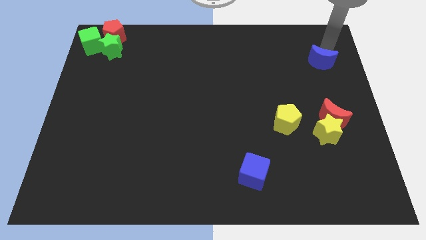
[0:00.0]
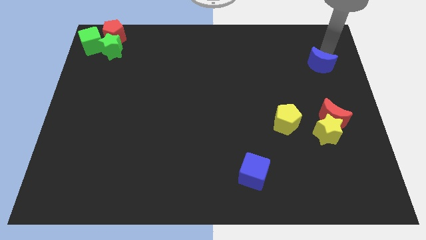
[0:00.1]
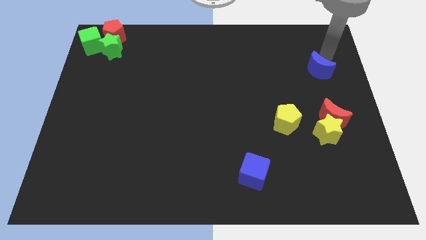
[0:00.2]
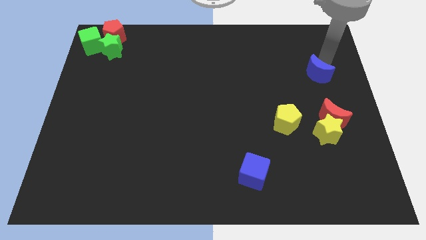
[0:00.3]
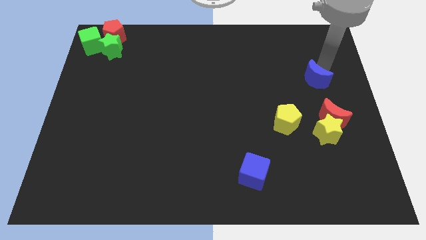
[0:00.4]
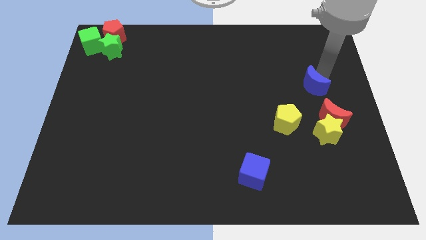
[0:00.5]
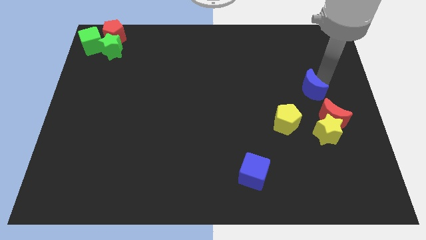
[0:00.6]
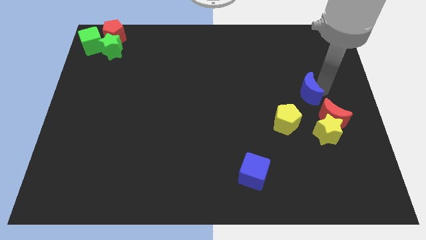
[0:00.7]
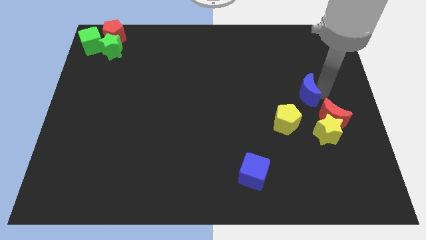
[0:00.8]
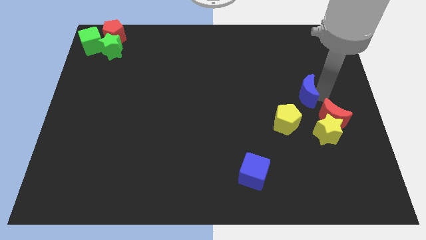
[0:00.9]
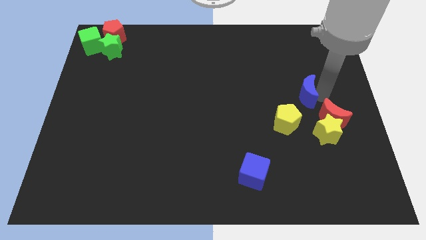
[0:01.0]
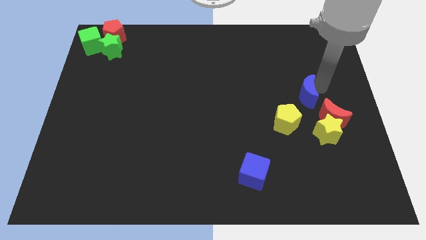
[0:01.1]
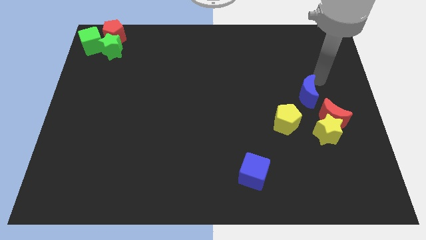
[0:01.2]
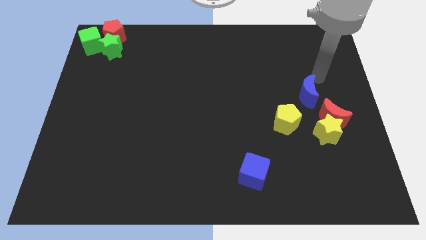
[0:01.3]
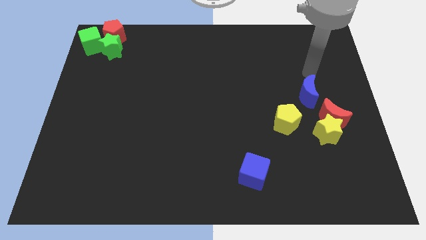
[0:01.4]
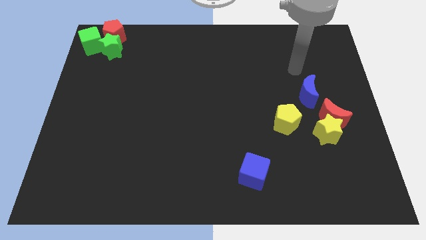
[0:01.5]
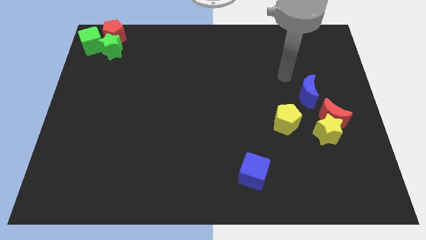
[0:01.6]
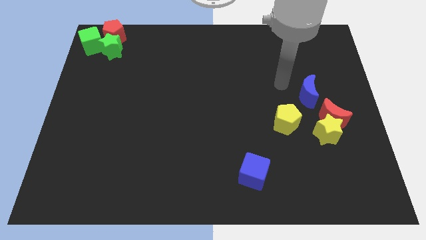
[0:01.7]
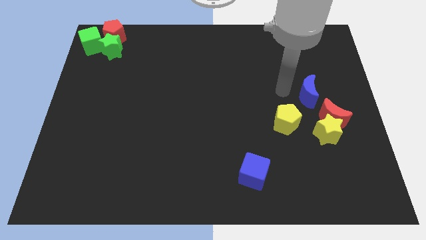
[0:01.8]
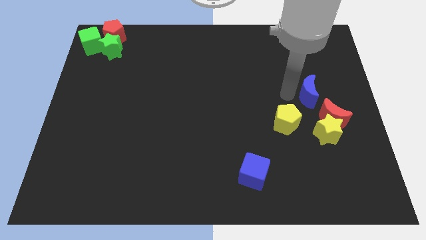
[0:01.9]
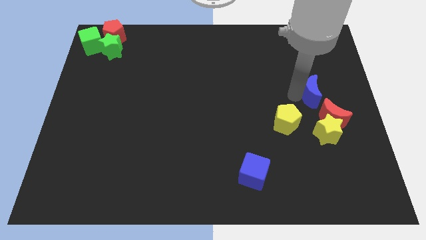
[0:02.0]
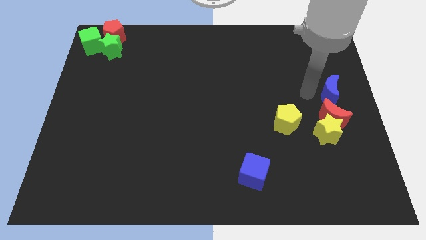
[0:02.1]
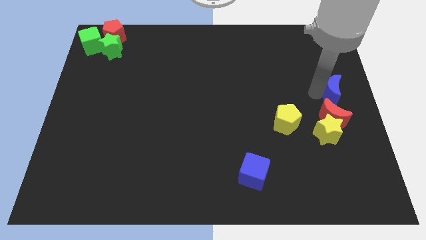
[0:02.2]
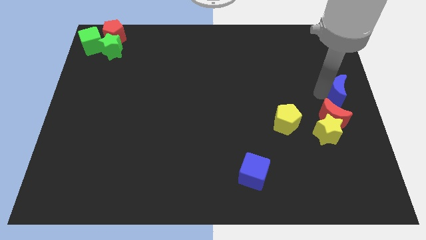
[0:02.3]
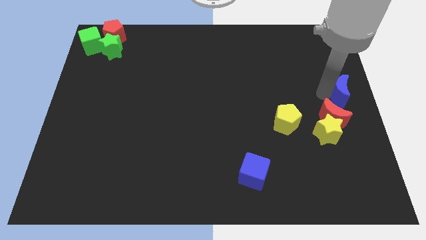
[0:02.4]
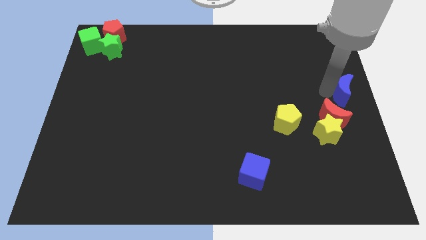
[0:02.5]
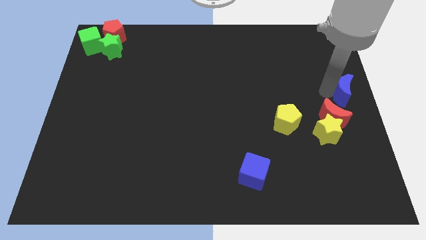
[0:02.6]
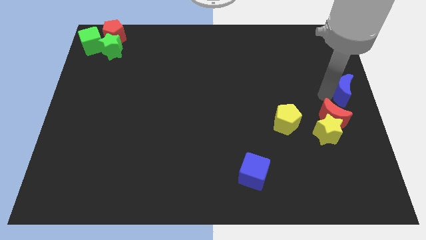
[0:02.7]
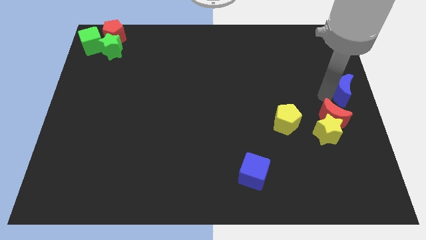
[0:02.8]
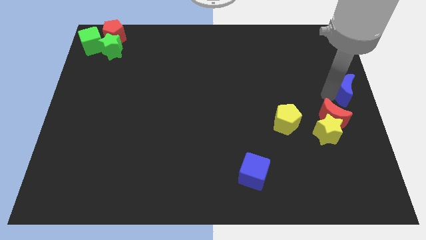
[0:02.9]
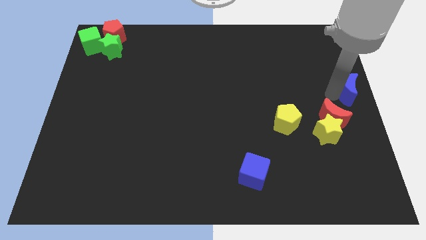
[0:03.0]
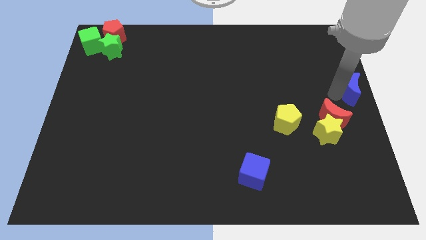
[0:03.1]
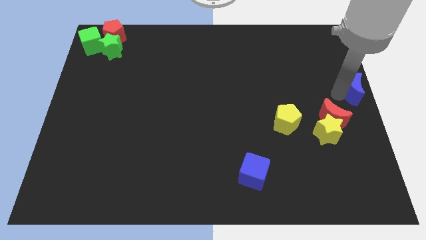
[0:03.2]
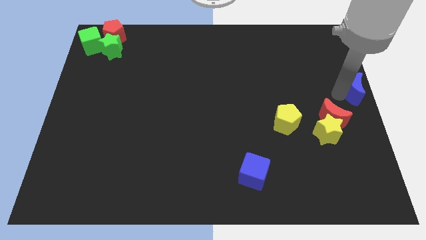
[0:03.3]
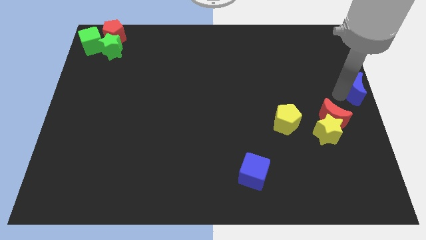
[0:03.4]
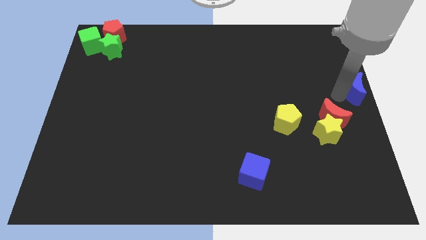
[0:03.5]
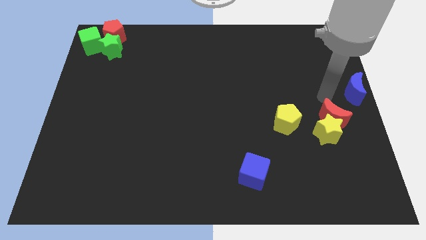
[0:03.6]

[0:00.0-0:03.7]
move the blue moon towards the center right side of the board

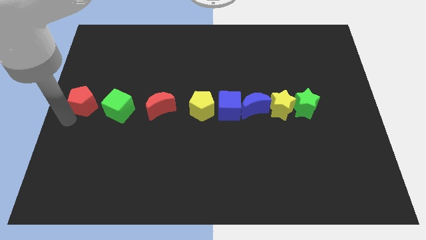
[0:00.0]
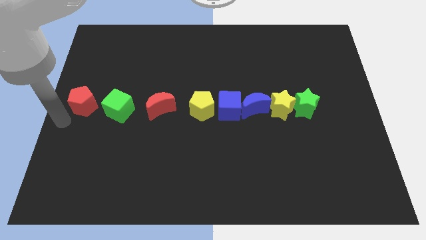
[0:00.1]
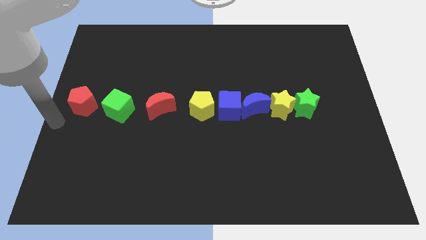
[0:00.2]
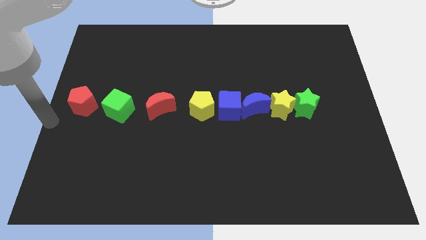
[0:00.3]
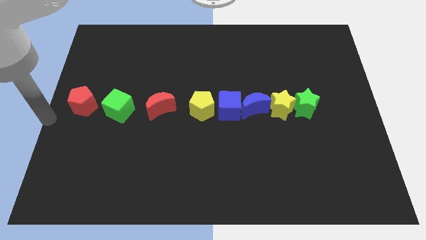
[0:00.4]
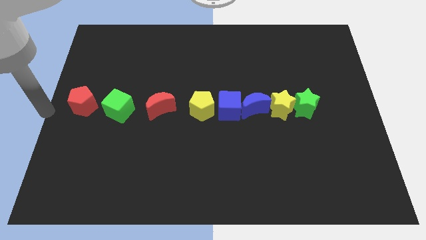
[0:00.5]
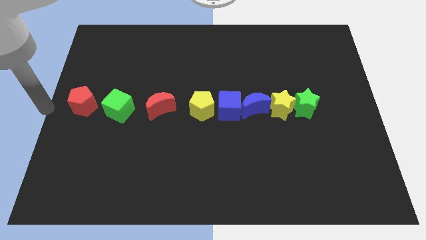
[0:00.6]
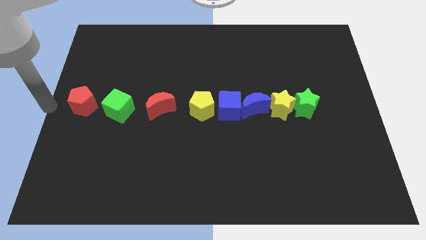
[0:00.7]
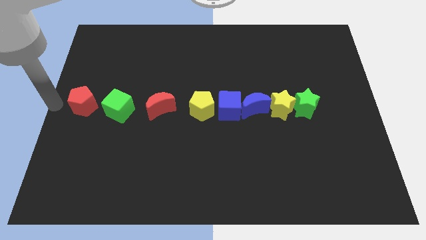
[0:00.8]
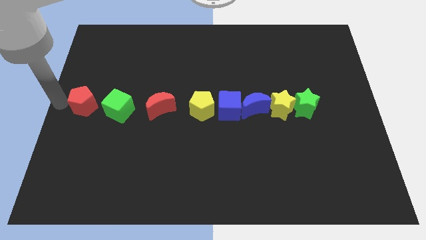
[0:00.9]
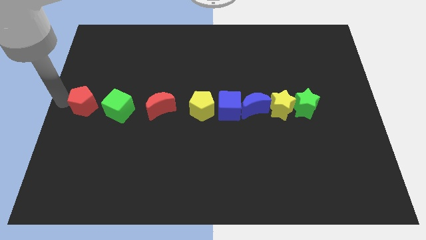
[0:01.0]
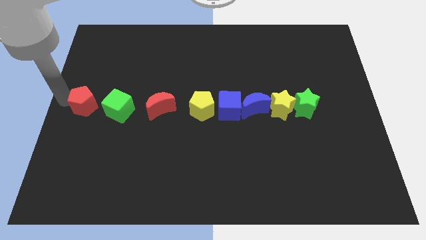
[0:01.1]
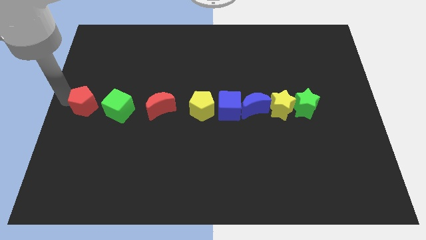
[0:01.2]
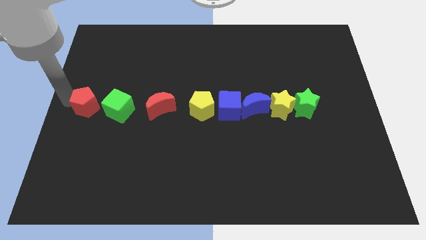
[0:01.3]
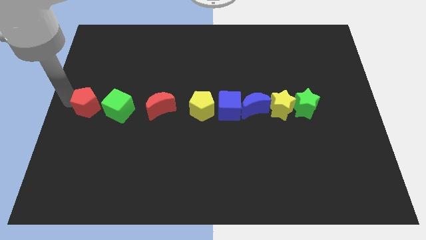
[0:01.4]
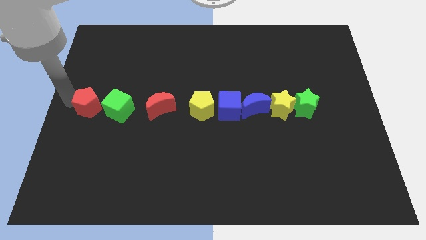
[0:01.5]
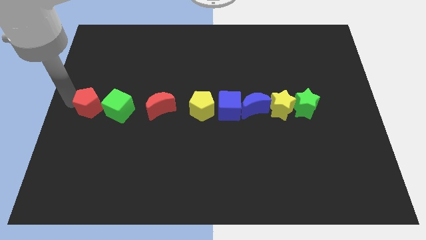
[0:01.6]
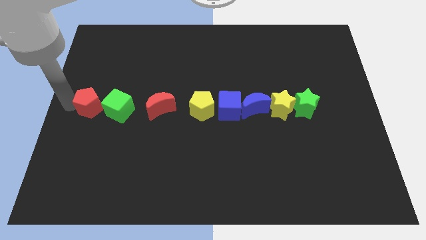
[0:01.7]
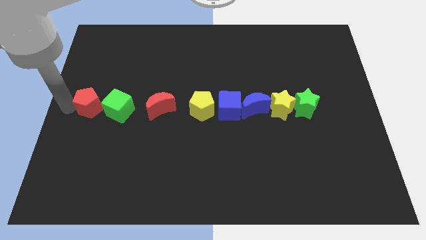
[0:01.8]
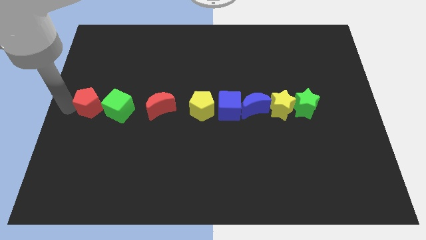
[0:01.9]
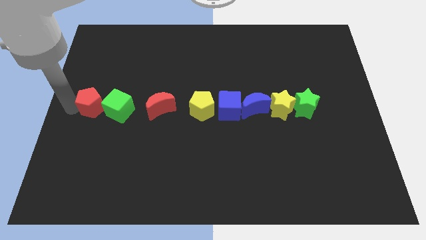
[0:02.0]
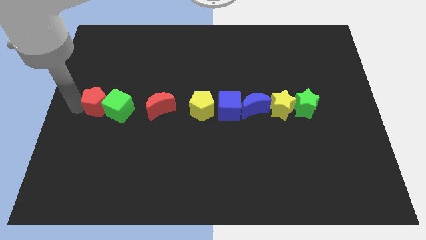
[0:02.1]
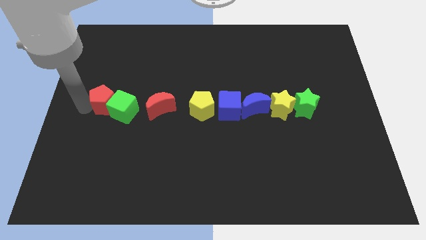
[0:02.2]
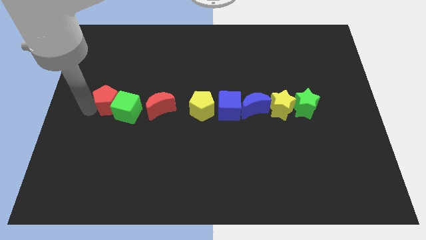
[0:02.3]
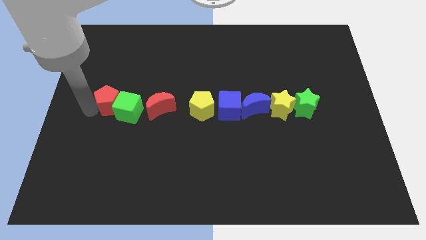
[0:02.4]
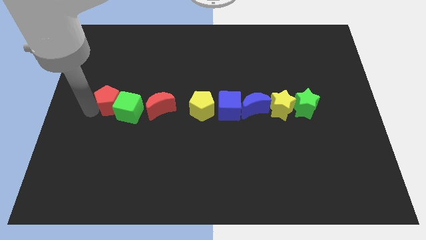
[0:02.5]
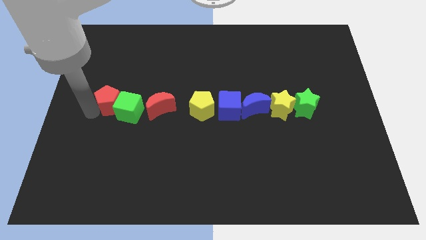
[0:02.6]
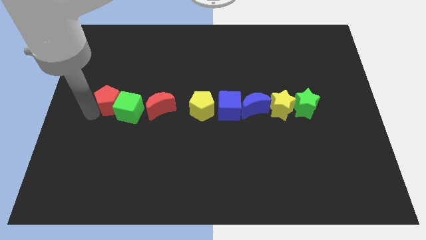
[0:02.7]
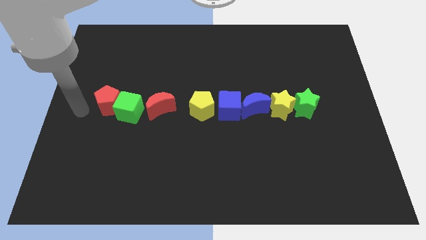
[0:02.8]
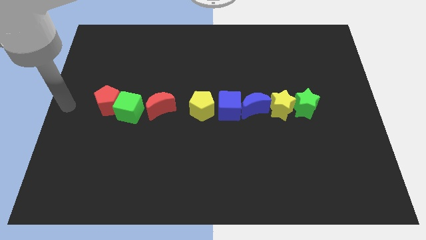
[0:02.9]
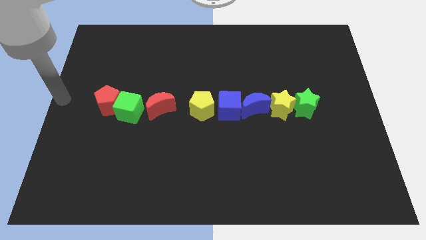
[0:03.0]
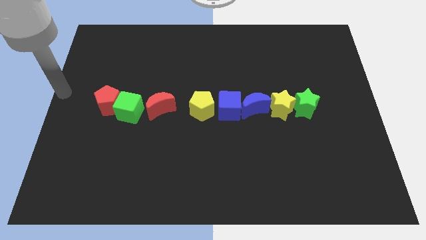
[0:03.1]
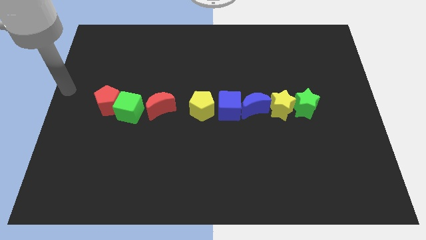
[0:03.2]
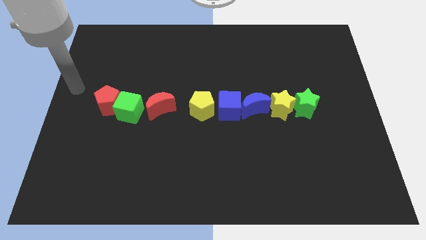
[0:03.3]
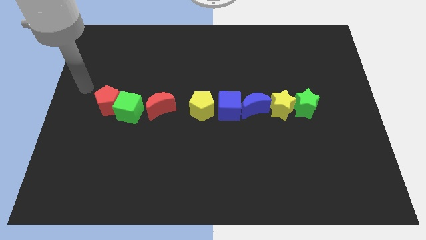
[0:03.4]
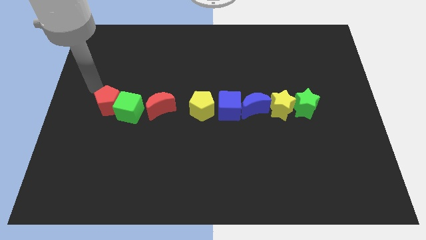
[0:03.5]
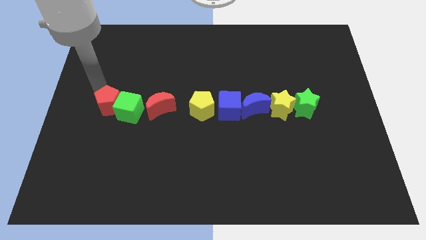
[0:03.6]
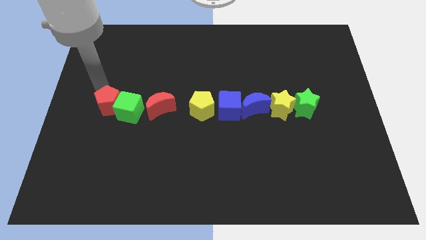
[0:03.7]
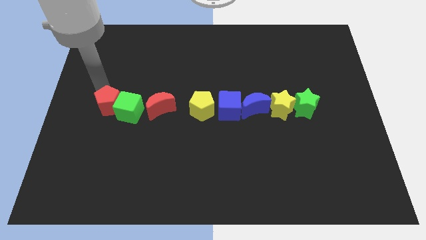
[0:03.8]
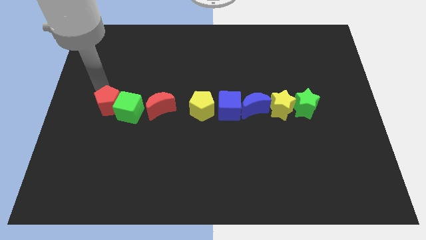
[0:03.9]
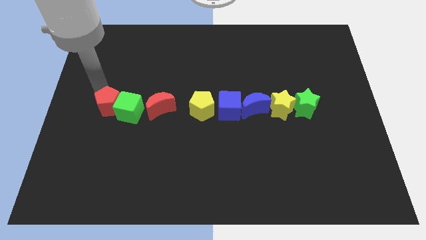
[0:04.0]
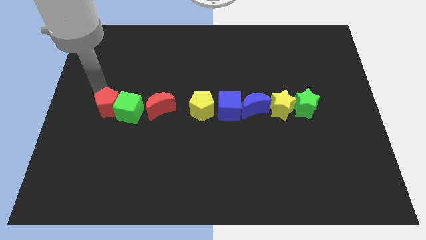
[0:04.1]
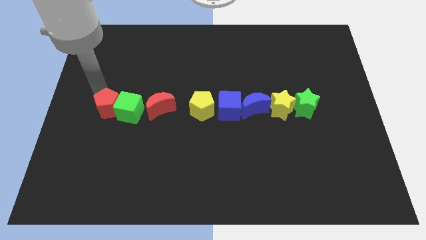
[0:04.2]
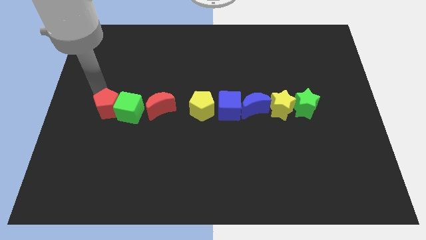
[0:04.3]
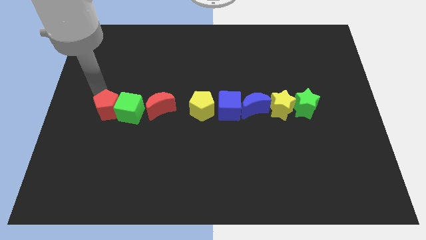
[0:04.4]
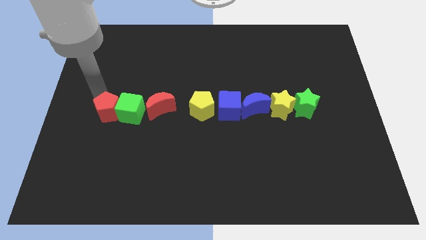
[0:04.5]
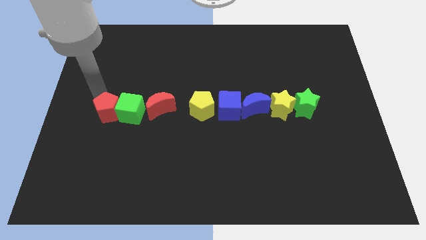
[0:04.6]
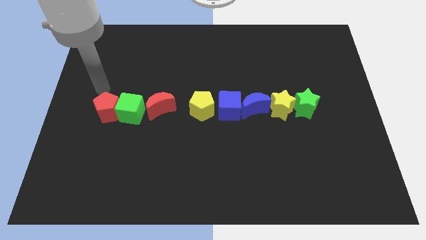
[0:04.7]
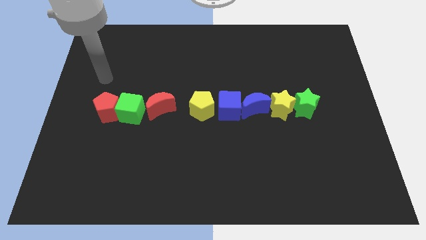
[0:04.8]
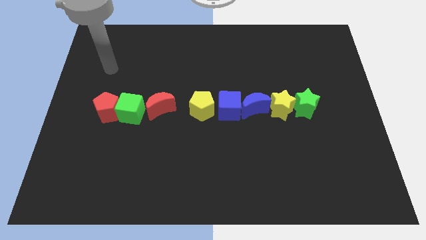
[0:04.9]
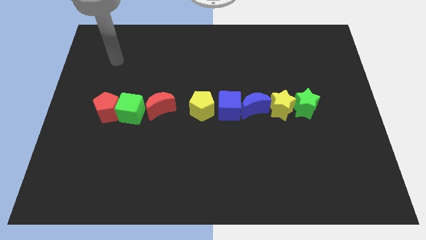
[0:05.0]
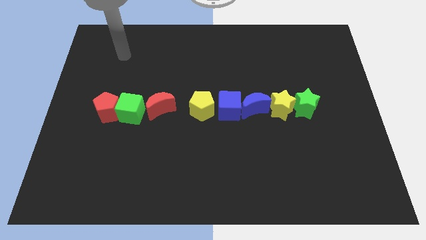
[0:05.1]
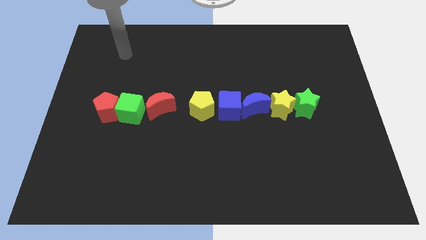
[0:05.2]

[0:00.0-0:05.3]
adjust the red pentagon to form a horizontal line with all blocks

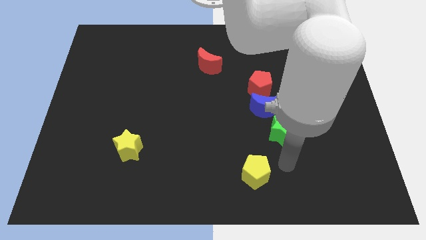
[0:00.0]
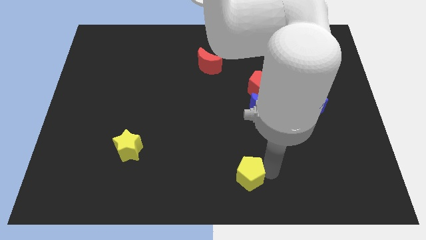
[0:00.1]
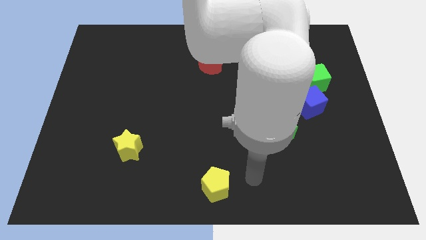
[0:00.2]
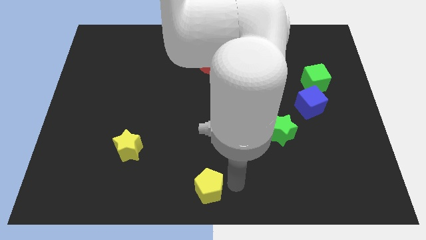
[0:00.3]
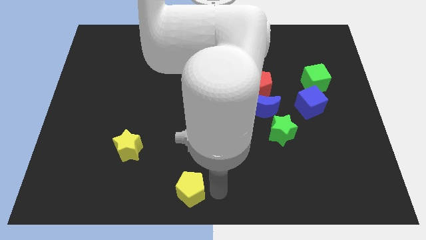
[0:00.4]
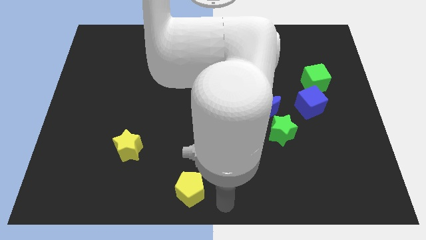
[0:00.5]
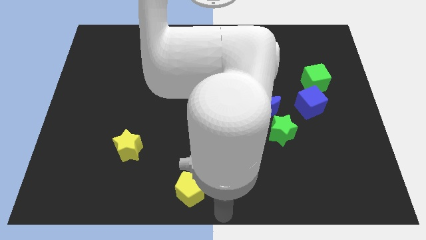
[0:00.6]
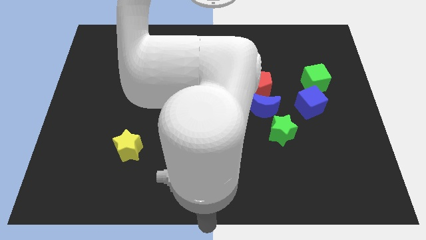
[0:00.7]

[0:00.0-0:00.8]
place the yellow pentagon below the yellow star
